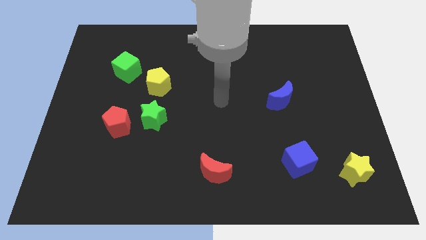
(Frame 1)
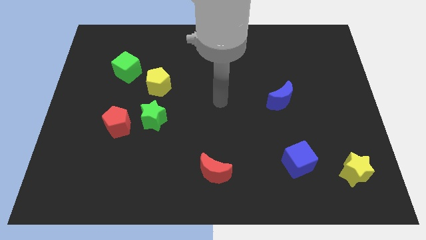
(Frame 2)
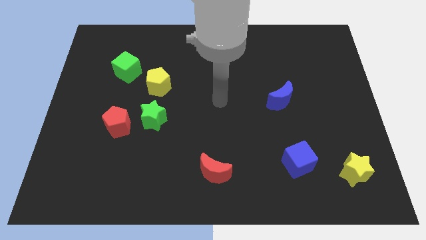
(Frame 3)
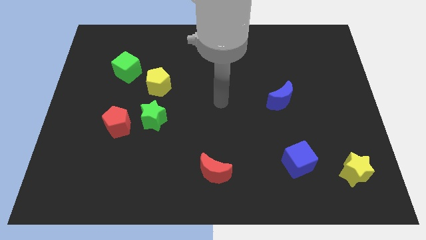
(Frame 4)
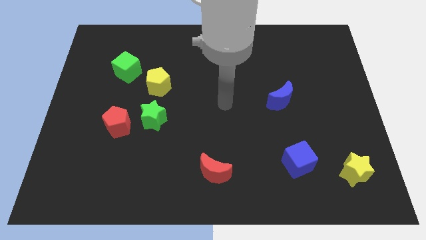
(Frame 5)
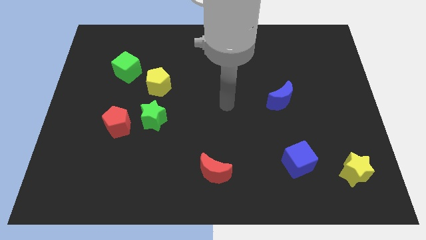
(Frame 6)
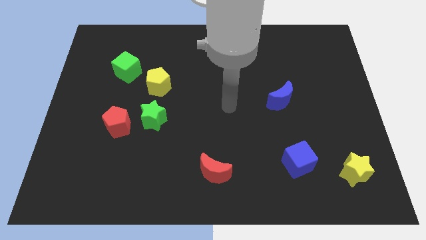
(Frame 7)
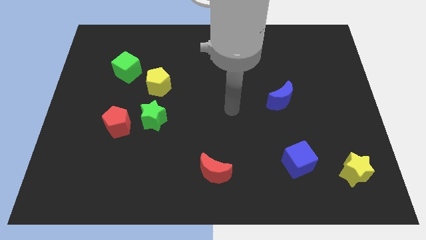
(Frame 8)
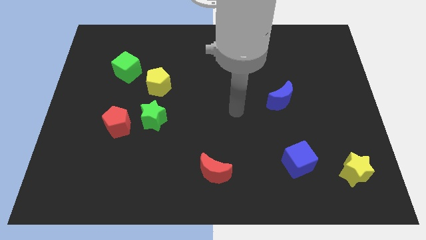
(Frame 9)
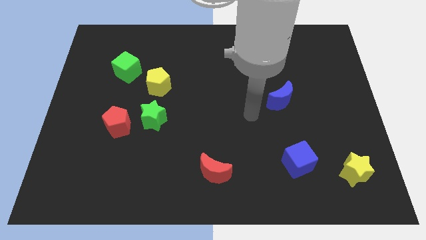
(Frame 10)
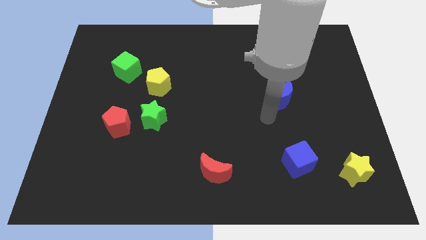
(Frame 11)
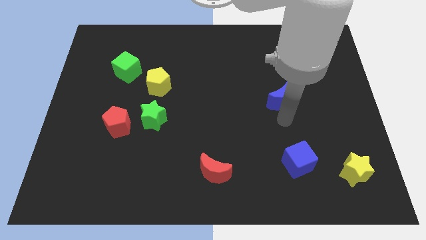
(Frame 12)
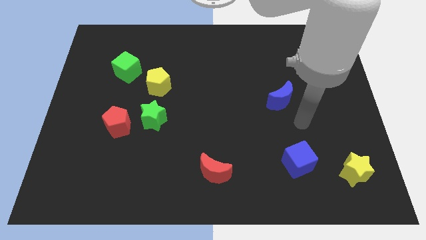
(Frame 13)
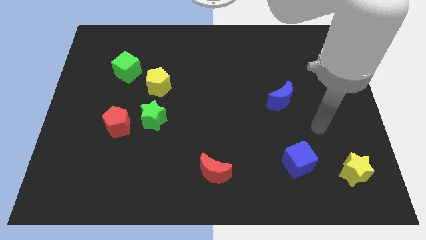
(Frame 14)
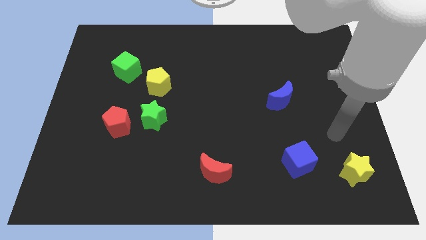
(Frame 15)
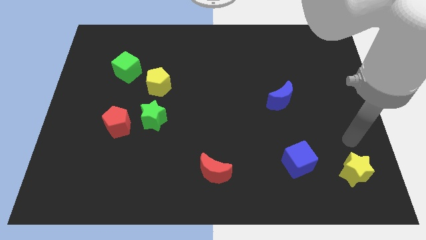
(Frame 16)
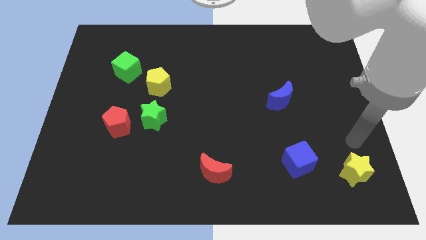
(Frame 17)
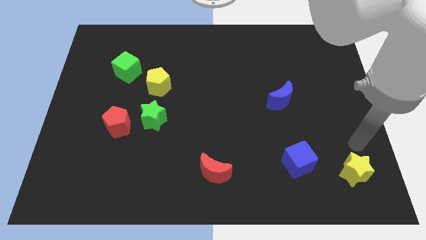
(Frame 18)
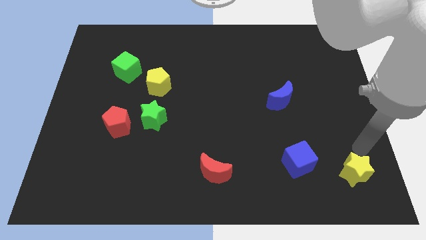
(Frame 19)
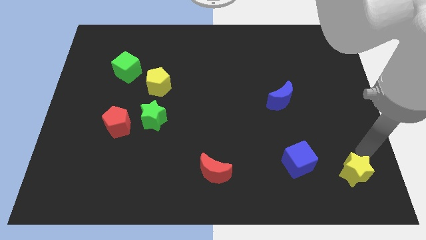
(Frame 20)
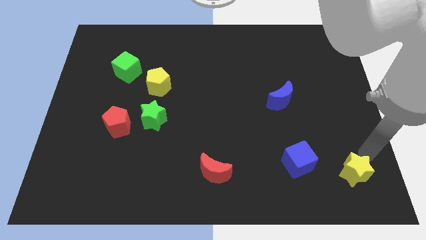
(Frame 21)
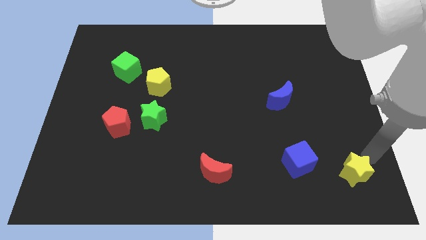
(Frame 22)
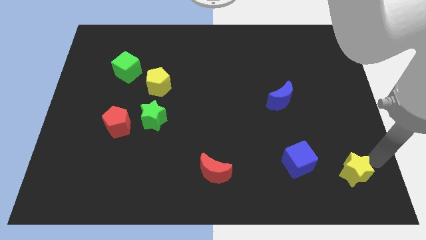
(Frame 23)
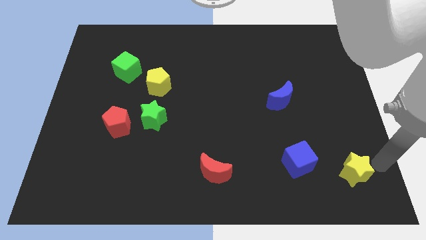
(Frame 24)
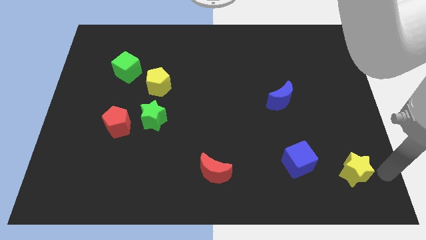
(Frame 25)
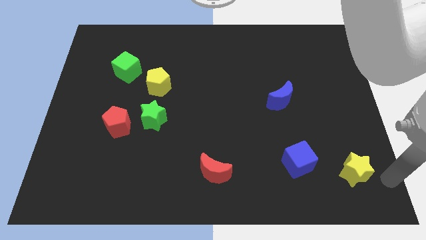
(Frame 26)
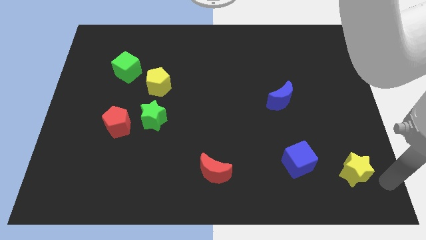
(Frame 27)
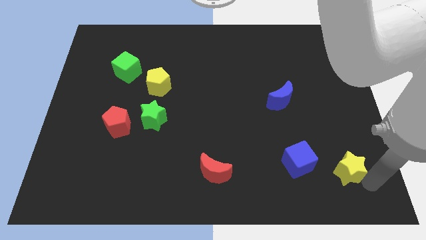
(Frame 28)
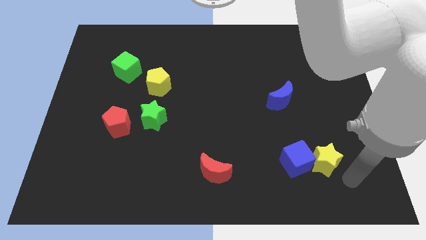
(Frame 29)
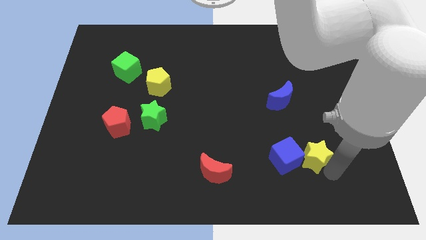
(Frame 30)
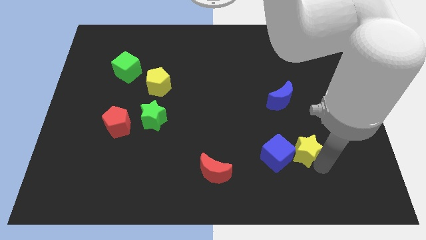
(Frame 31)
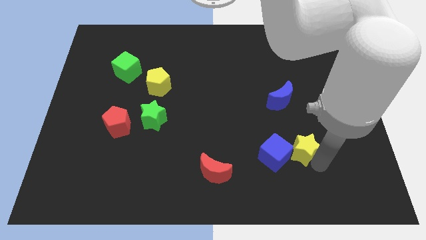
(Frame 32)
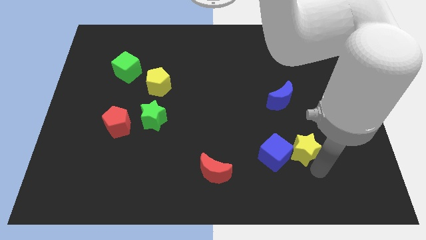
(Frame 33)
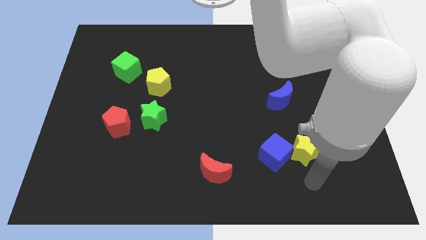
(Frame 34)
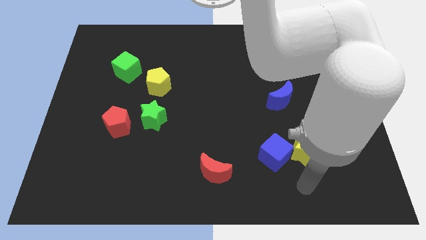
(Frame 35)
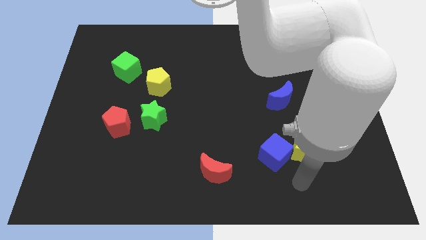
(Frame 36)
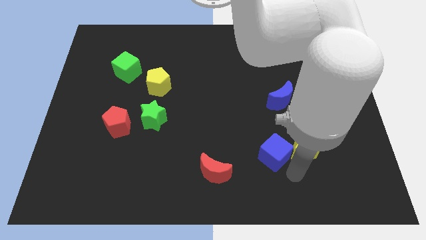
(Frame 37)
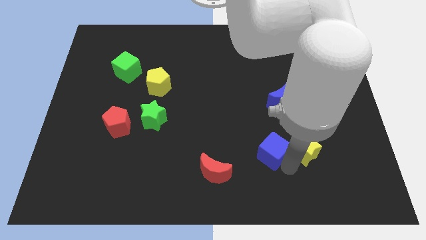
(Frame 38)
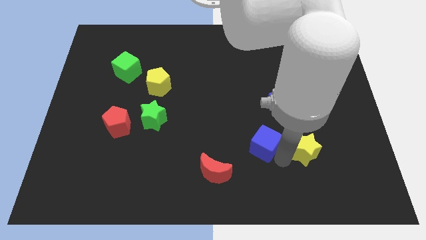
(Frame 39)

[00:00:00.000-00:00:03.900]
push the yellow star into the blue cube

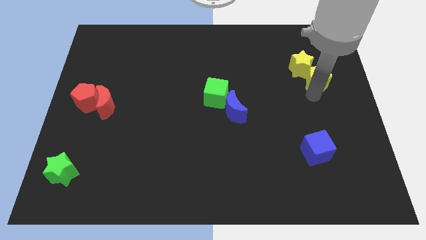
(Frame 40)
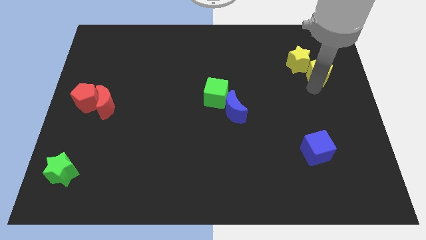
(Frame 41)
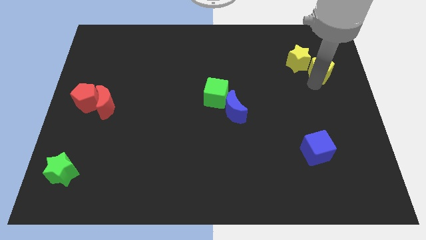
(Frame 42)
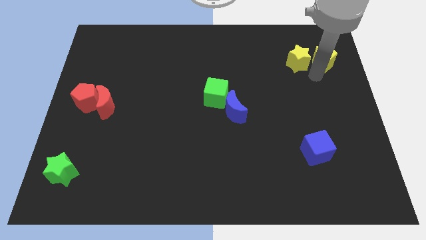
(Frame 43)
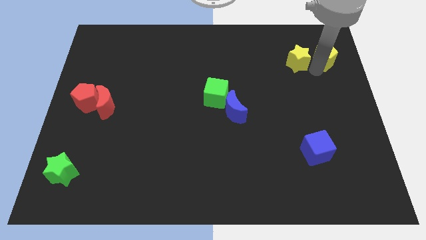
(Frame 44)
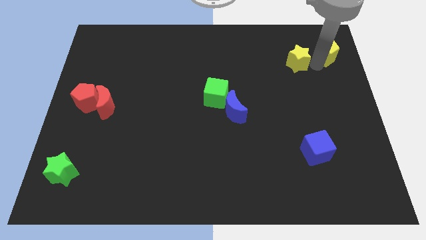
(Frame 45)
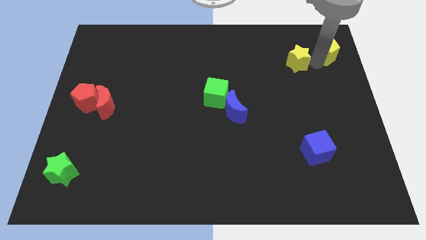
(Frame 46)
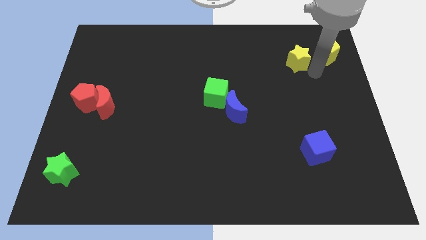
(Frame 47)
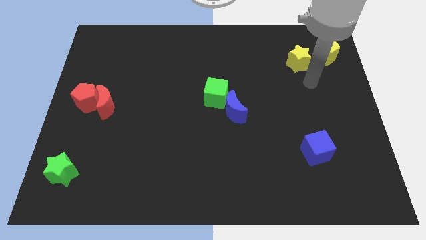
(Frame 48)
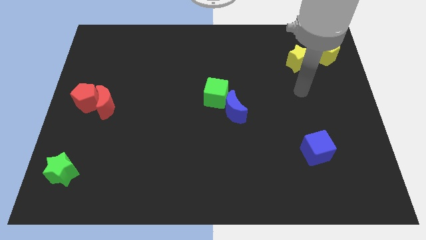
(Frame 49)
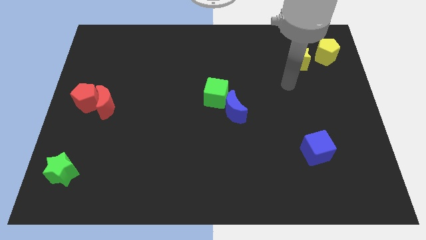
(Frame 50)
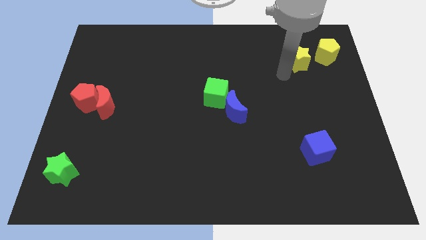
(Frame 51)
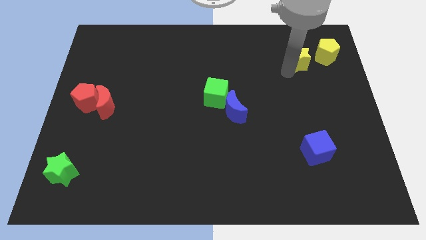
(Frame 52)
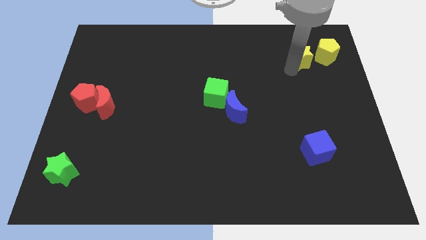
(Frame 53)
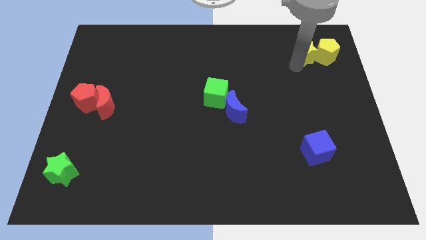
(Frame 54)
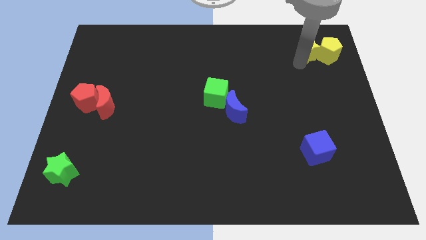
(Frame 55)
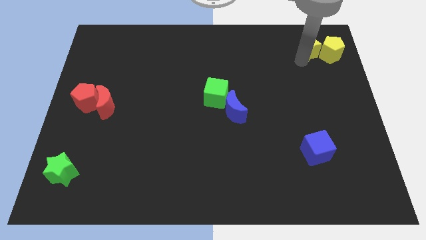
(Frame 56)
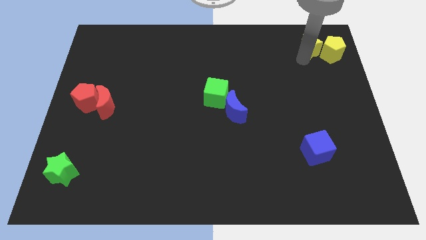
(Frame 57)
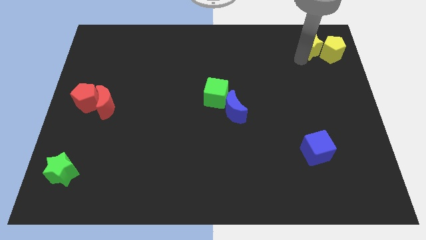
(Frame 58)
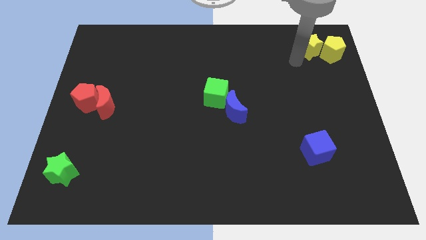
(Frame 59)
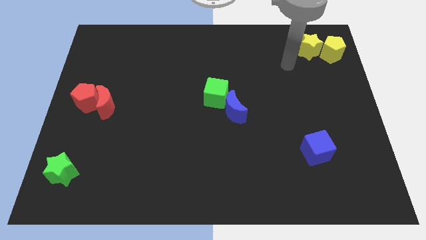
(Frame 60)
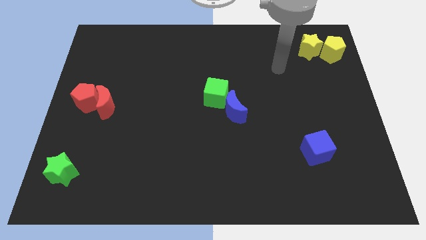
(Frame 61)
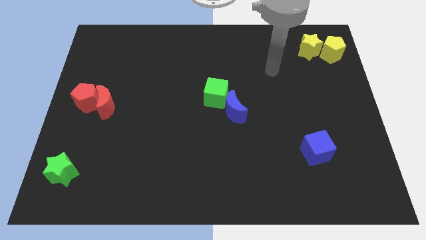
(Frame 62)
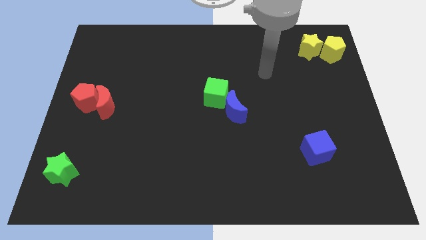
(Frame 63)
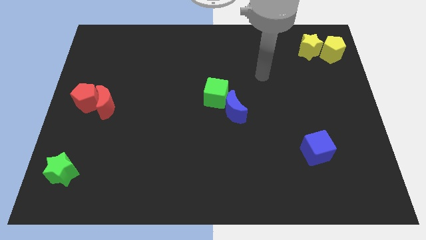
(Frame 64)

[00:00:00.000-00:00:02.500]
push yellow star with yellow pentagon towards top right side of the board

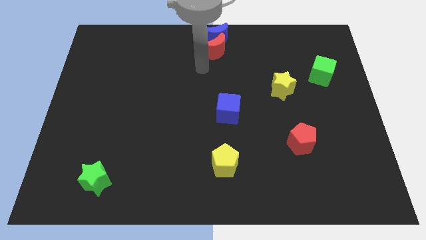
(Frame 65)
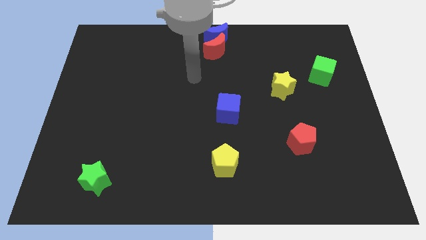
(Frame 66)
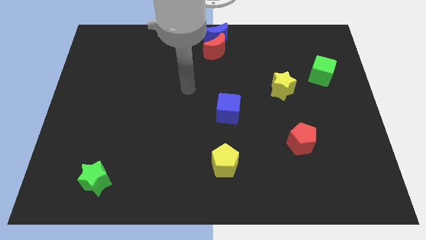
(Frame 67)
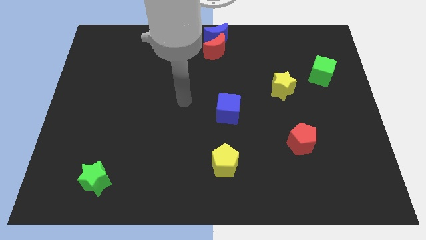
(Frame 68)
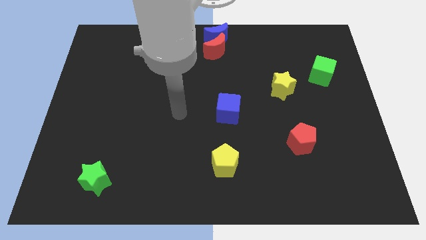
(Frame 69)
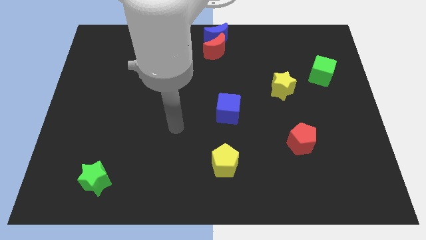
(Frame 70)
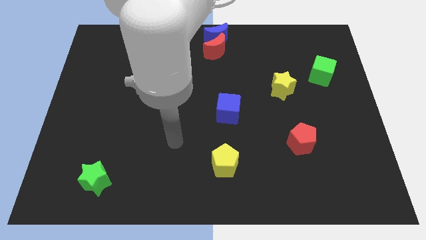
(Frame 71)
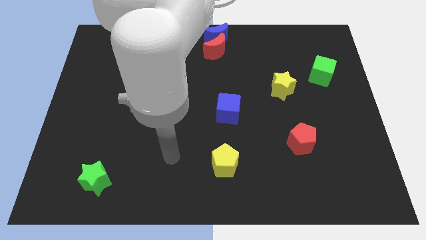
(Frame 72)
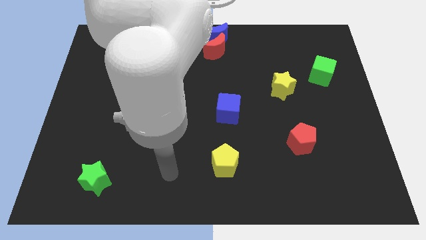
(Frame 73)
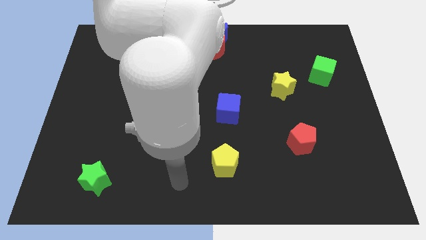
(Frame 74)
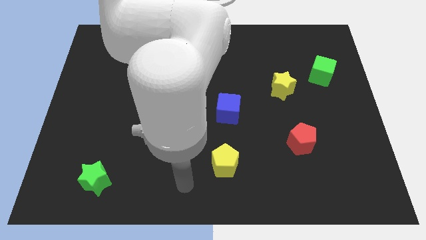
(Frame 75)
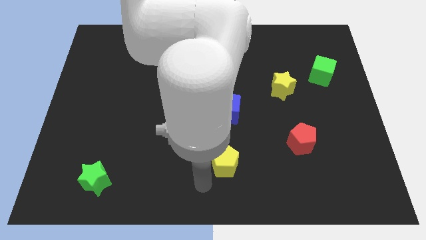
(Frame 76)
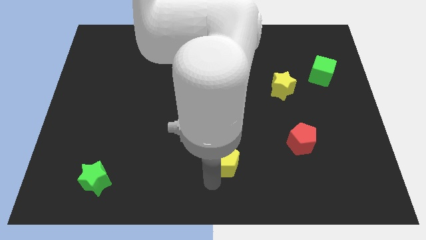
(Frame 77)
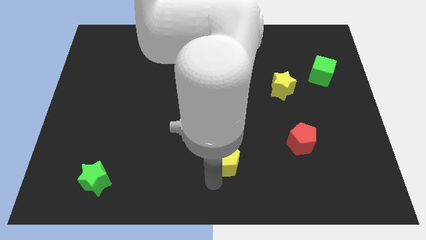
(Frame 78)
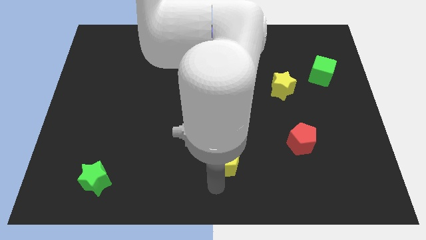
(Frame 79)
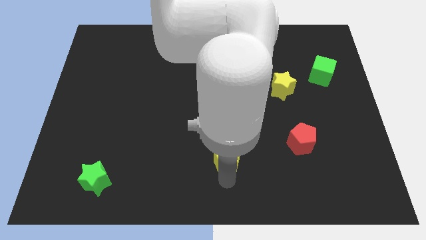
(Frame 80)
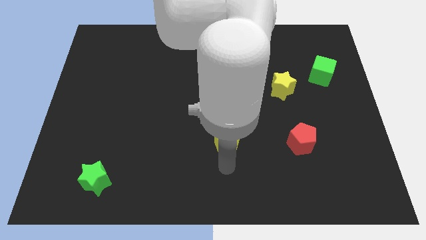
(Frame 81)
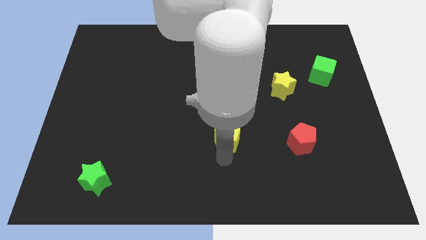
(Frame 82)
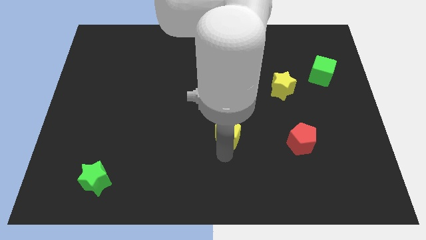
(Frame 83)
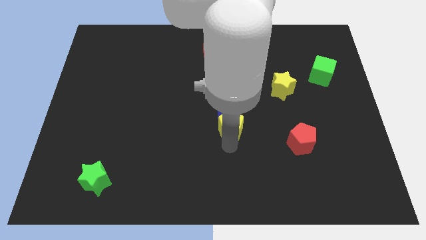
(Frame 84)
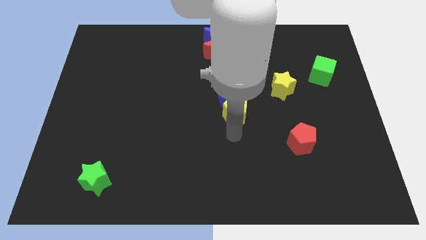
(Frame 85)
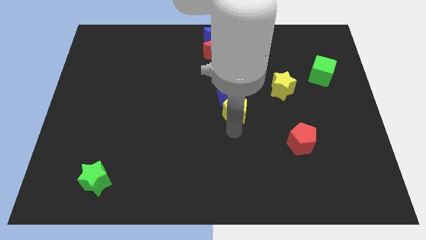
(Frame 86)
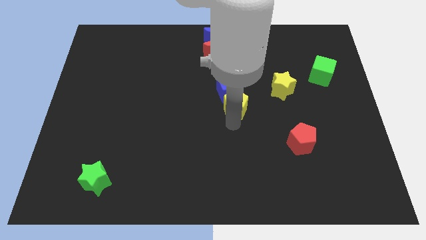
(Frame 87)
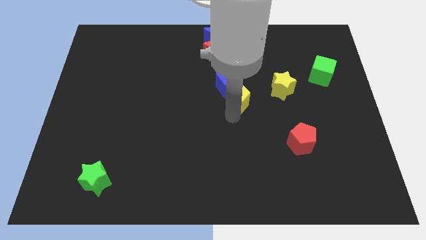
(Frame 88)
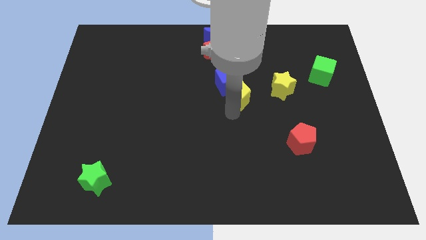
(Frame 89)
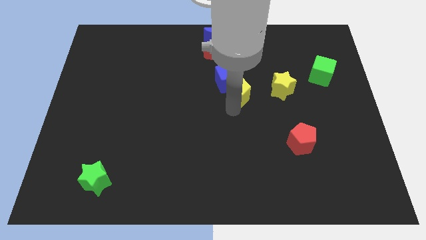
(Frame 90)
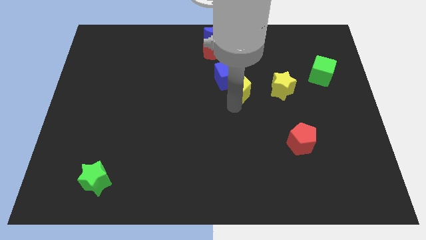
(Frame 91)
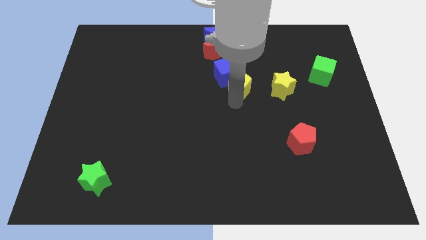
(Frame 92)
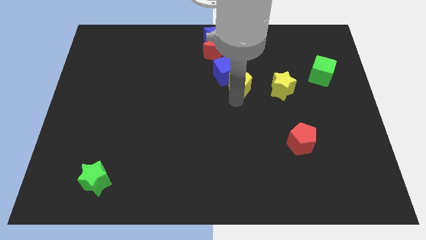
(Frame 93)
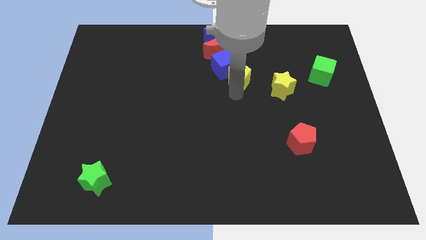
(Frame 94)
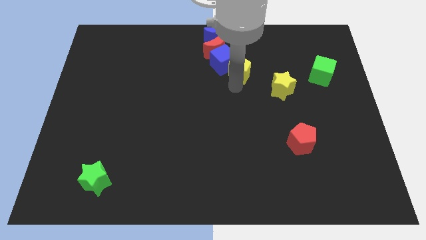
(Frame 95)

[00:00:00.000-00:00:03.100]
push the yellow pentagon into the blue cube
